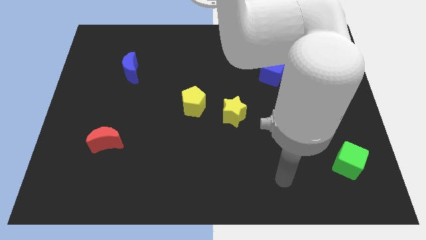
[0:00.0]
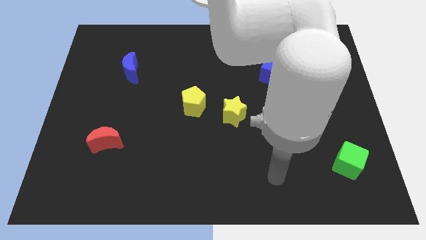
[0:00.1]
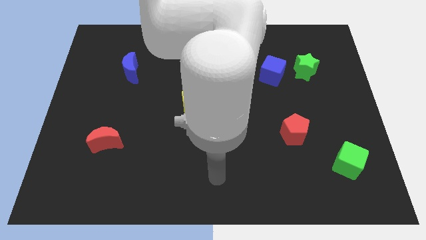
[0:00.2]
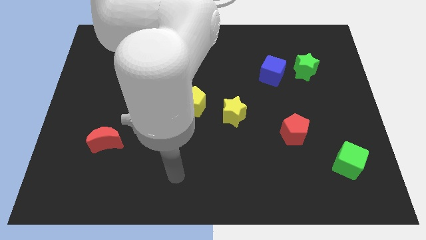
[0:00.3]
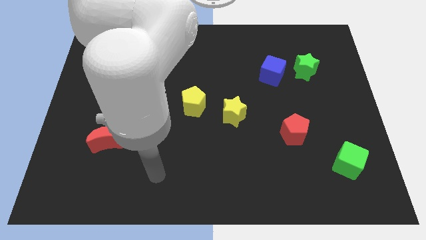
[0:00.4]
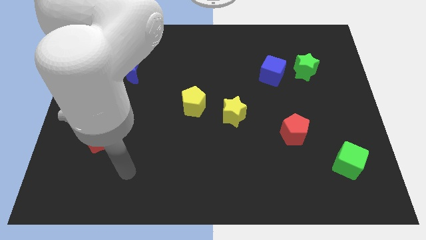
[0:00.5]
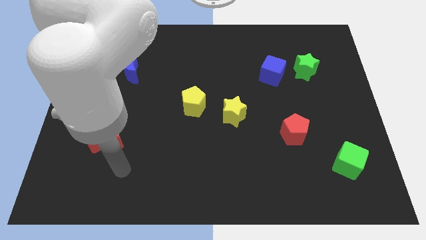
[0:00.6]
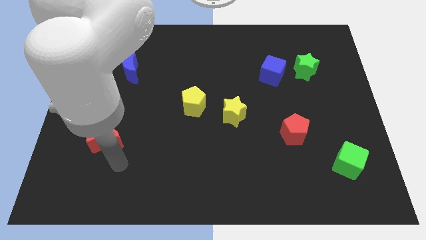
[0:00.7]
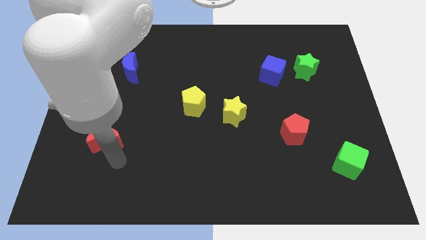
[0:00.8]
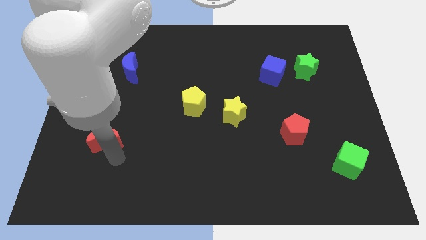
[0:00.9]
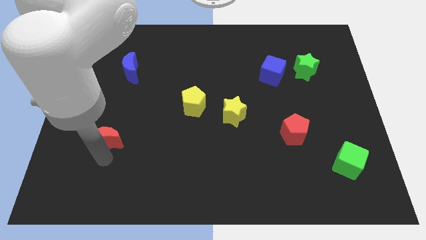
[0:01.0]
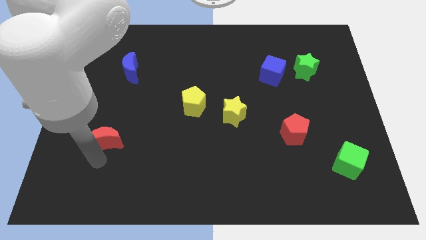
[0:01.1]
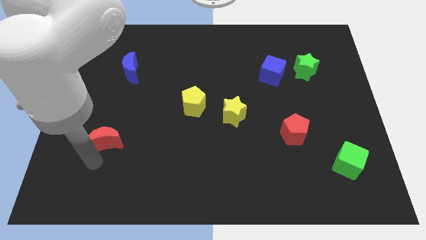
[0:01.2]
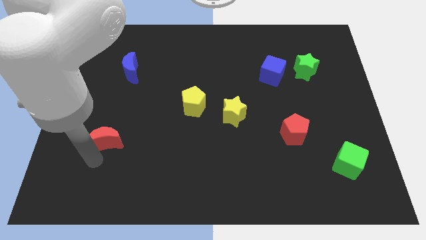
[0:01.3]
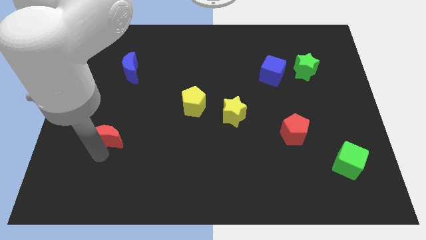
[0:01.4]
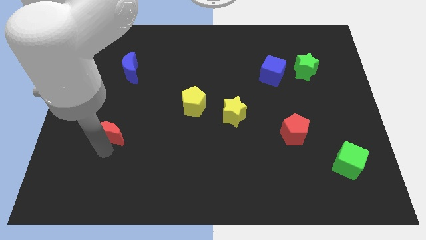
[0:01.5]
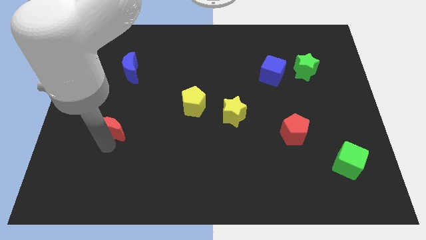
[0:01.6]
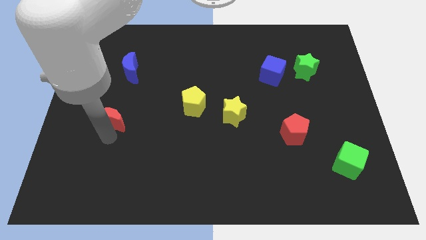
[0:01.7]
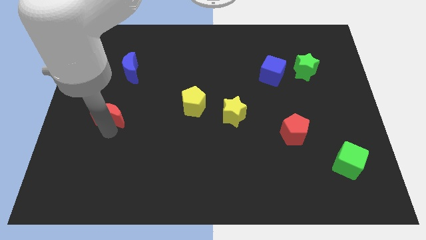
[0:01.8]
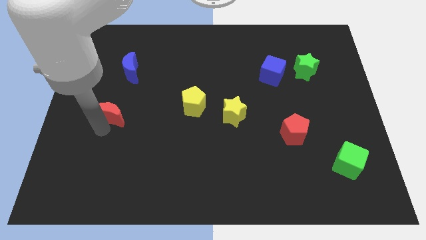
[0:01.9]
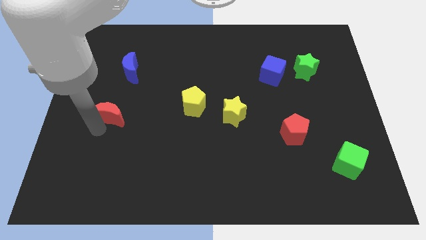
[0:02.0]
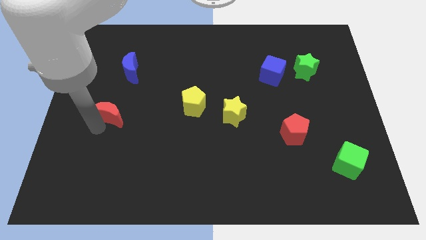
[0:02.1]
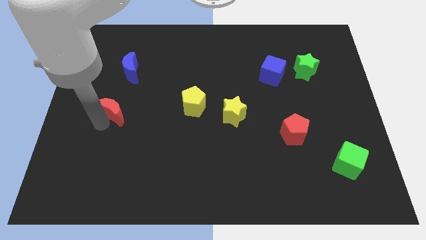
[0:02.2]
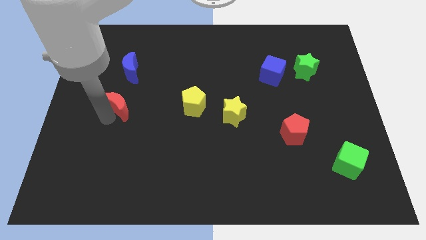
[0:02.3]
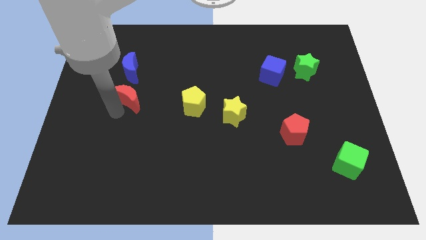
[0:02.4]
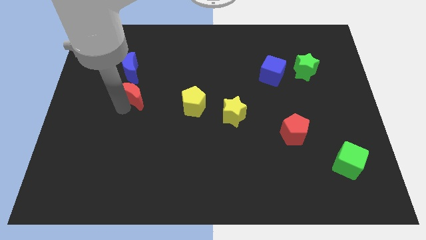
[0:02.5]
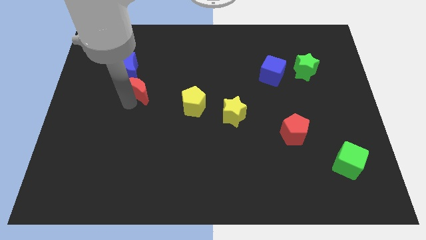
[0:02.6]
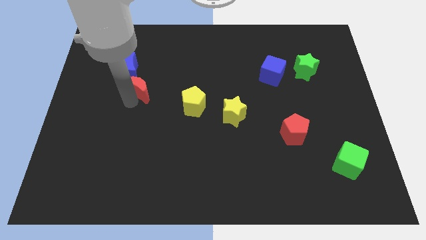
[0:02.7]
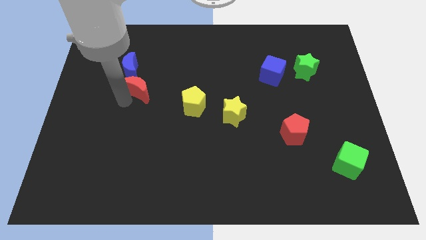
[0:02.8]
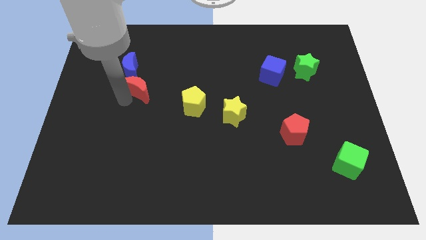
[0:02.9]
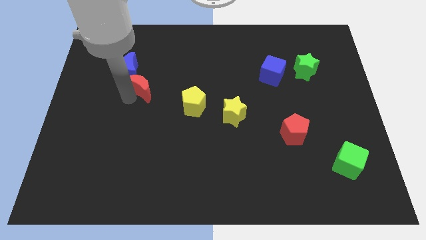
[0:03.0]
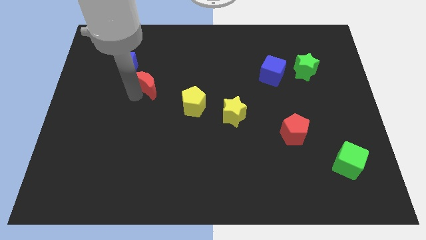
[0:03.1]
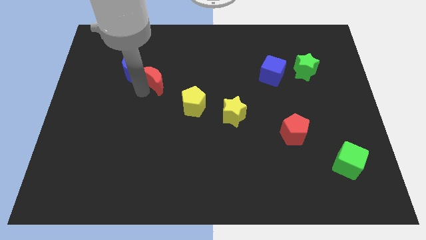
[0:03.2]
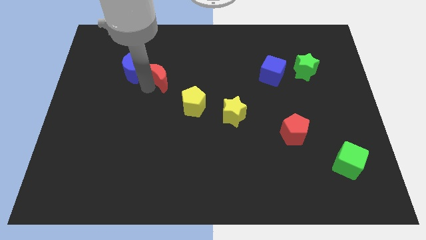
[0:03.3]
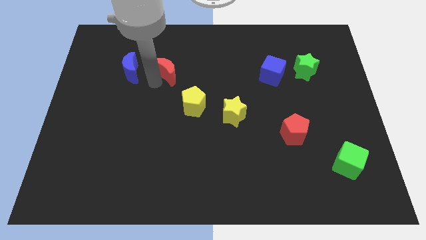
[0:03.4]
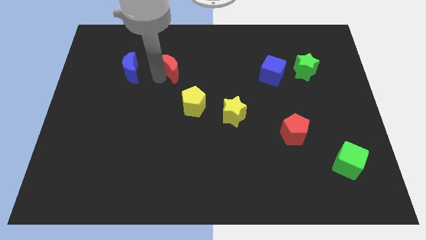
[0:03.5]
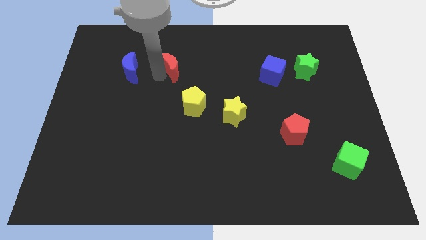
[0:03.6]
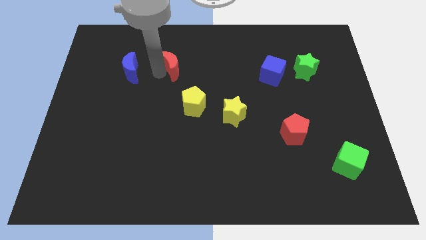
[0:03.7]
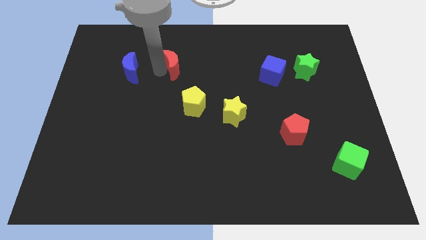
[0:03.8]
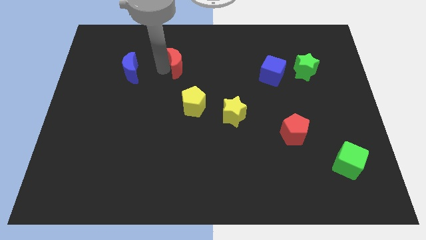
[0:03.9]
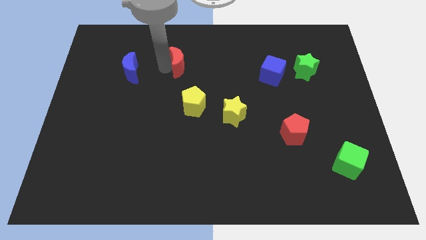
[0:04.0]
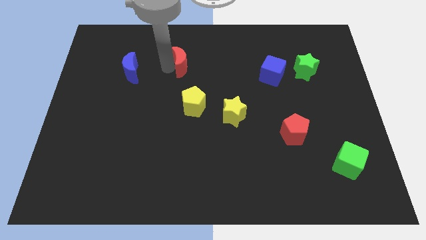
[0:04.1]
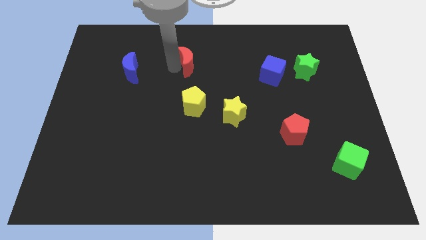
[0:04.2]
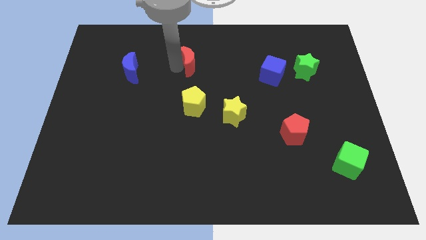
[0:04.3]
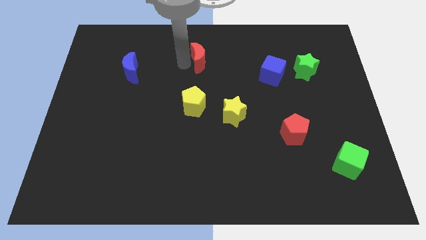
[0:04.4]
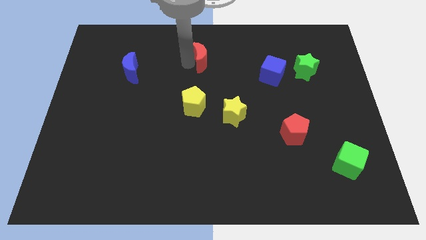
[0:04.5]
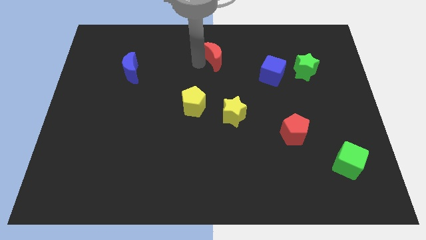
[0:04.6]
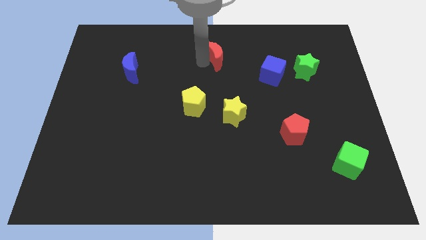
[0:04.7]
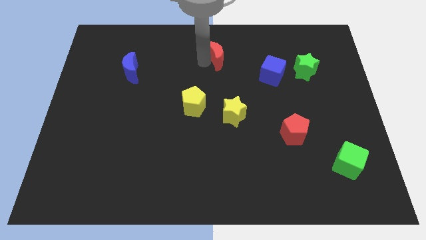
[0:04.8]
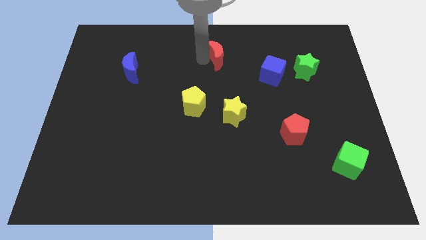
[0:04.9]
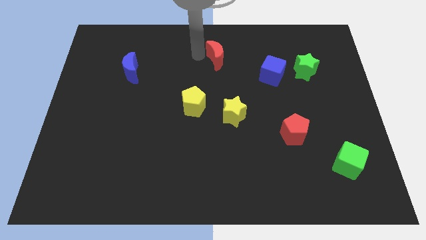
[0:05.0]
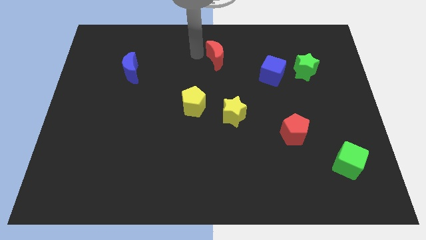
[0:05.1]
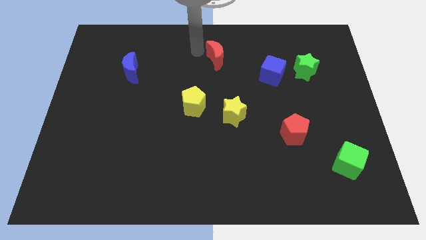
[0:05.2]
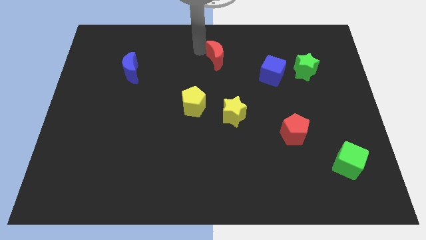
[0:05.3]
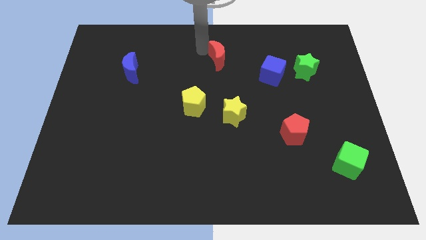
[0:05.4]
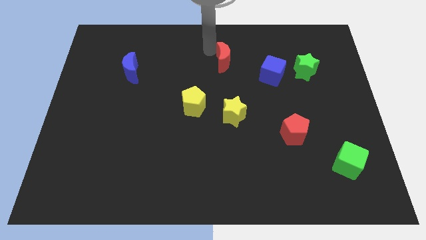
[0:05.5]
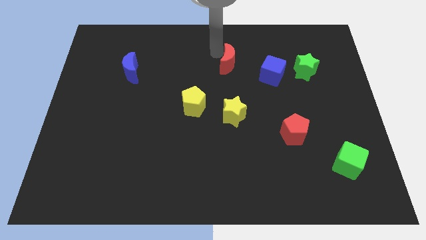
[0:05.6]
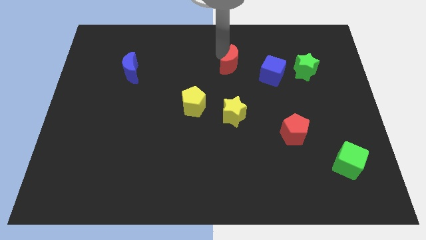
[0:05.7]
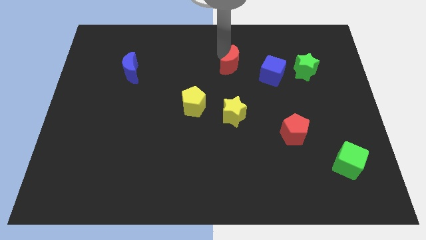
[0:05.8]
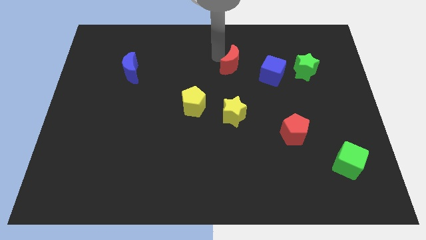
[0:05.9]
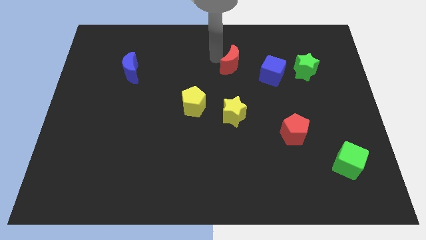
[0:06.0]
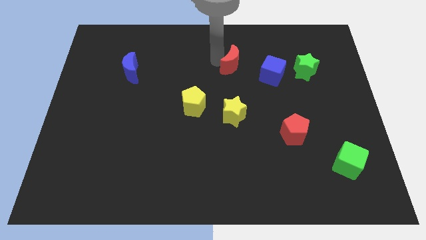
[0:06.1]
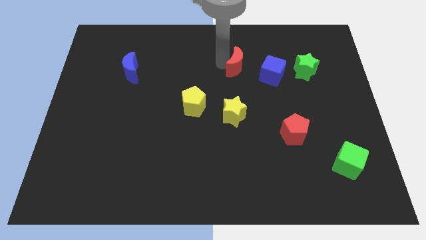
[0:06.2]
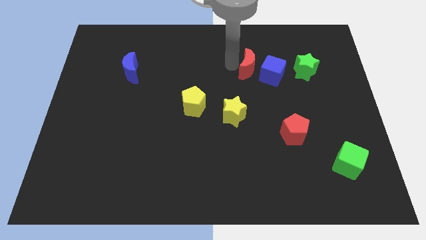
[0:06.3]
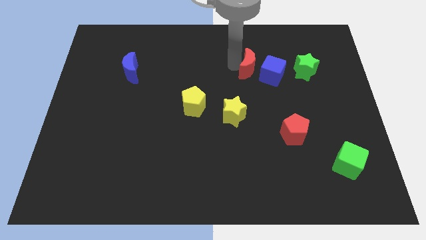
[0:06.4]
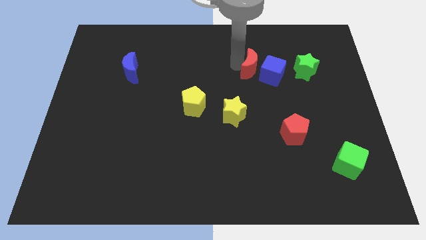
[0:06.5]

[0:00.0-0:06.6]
move the red moon to the blue cube

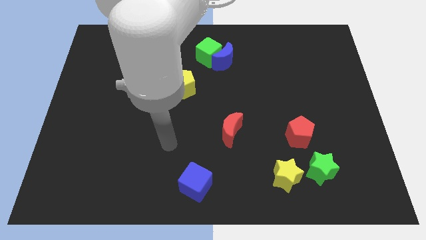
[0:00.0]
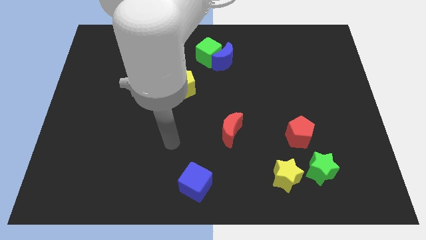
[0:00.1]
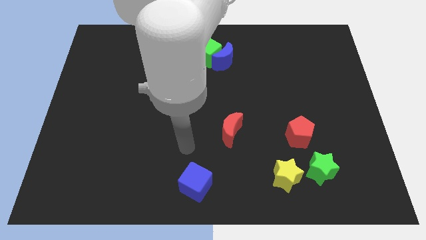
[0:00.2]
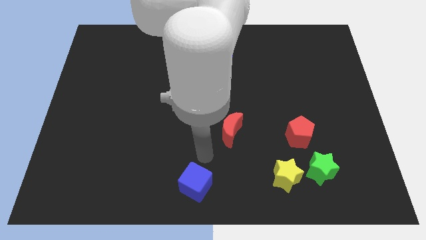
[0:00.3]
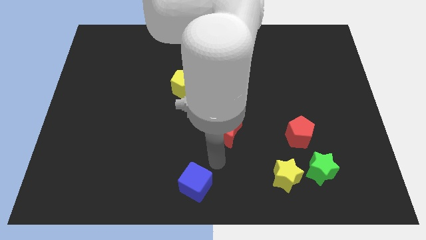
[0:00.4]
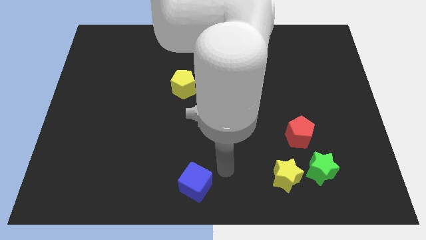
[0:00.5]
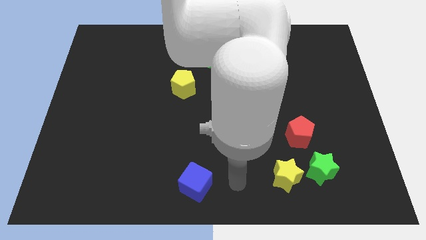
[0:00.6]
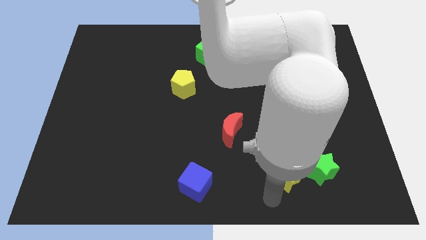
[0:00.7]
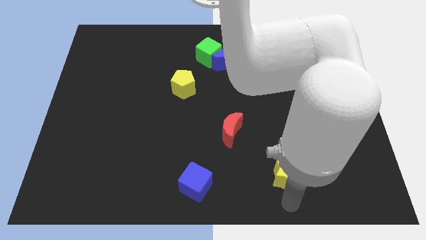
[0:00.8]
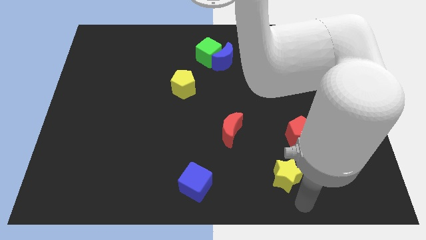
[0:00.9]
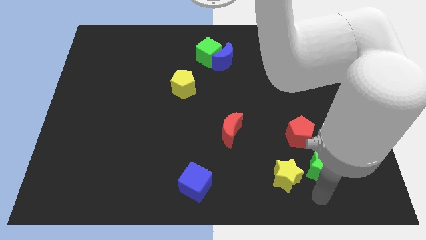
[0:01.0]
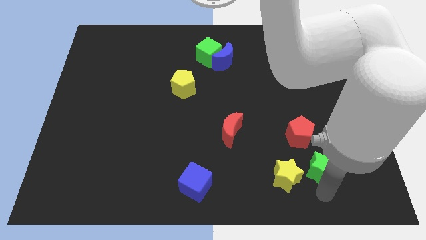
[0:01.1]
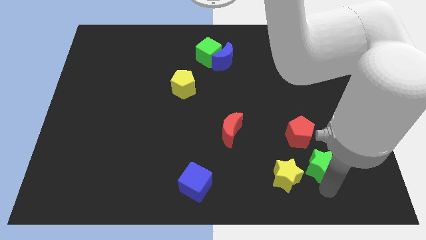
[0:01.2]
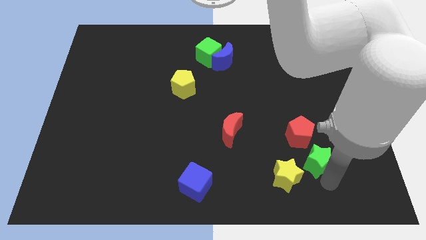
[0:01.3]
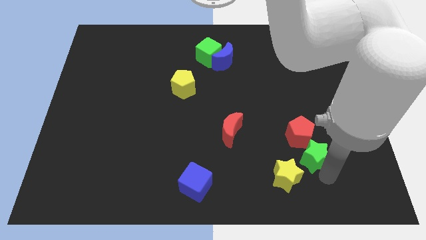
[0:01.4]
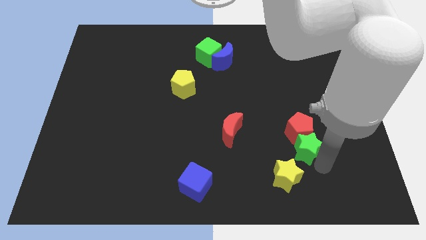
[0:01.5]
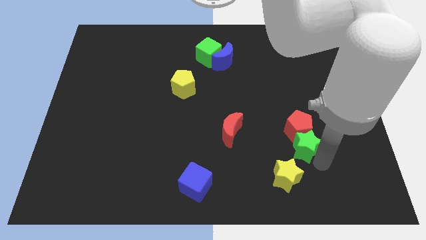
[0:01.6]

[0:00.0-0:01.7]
put the green star close to the red pentagon

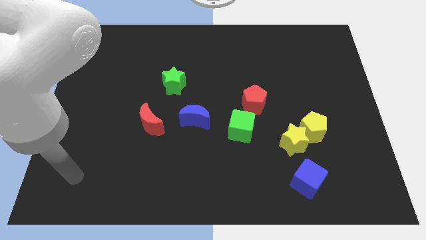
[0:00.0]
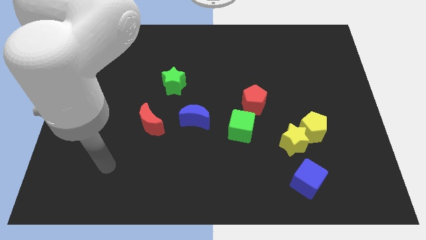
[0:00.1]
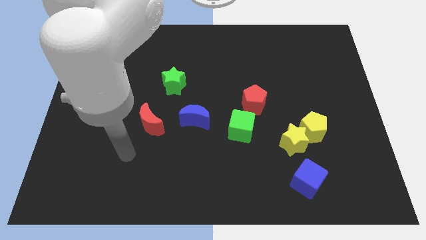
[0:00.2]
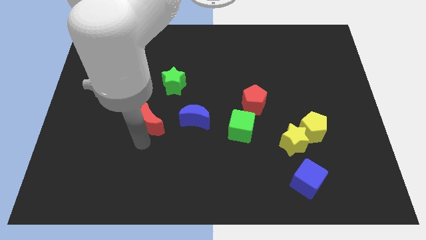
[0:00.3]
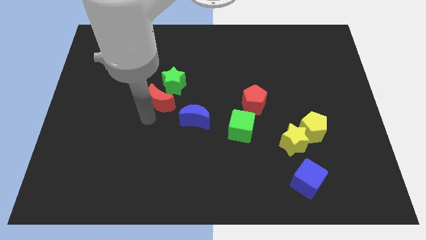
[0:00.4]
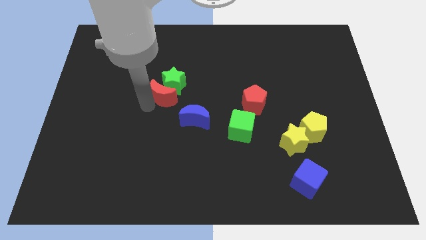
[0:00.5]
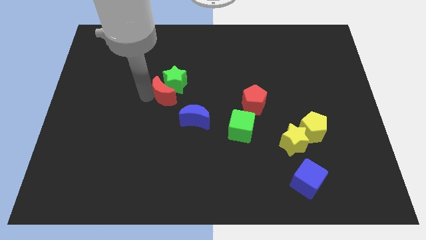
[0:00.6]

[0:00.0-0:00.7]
put the red moon to the green star
